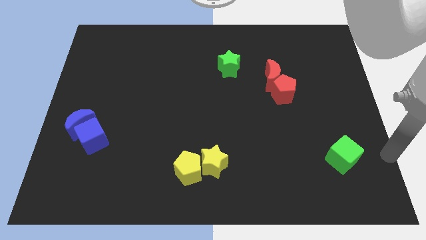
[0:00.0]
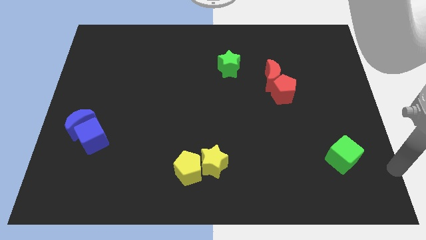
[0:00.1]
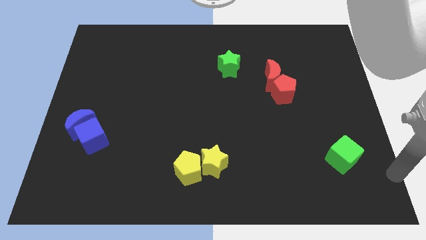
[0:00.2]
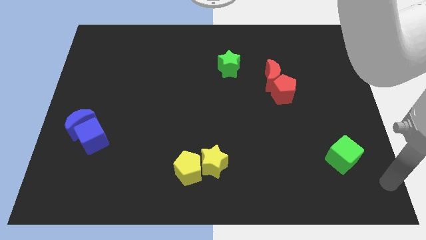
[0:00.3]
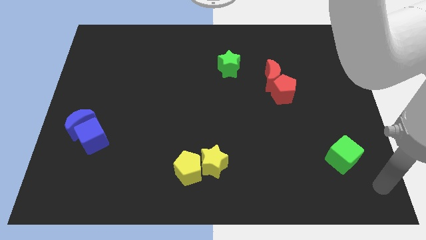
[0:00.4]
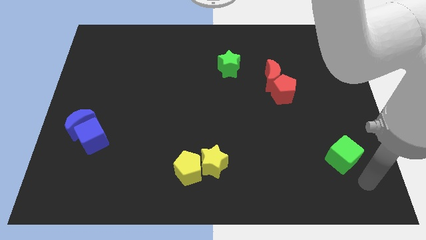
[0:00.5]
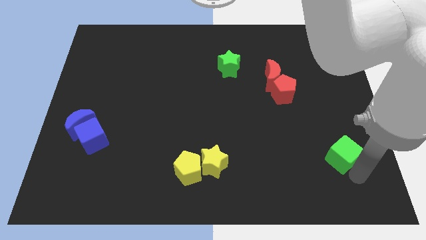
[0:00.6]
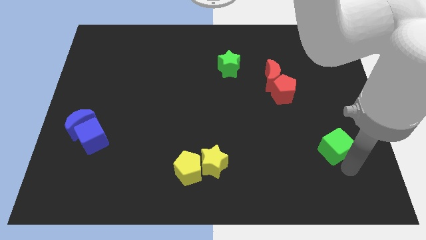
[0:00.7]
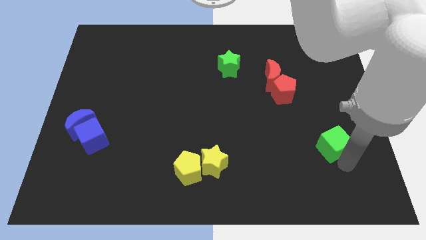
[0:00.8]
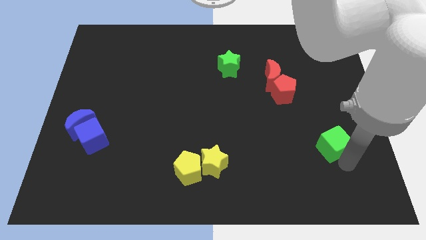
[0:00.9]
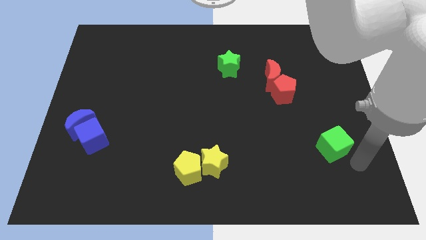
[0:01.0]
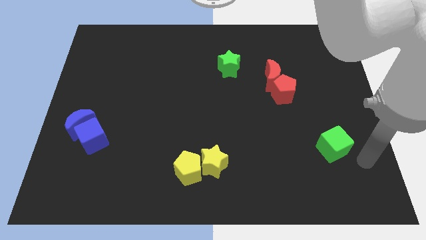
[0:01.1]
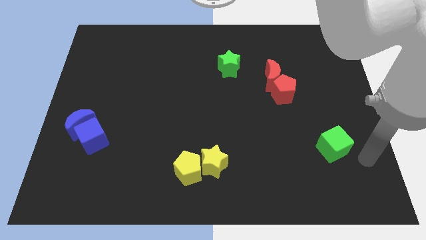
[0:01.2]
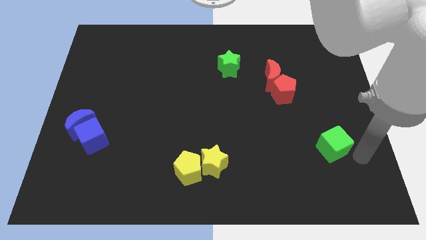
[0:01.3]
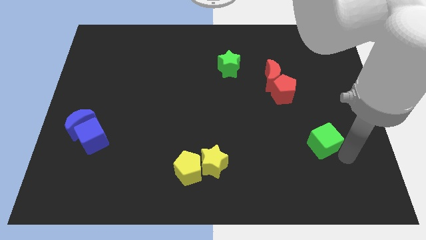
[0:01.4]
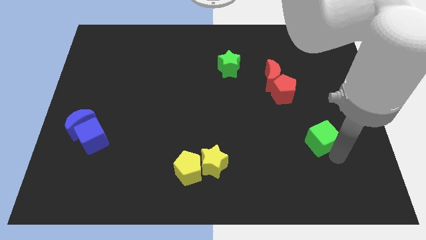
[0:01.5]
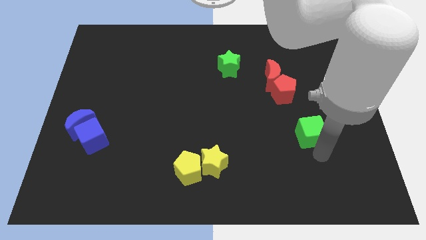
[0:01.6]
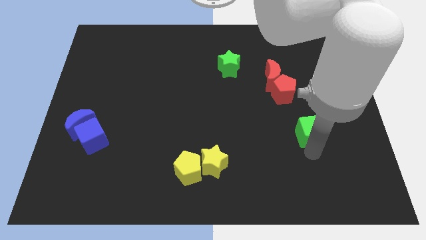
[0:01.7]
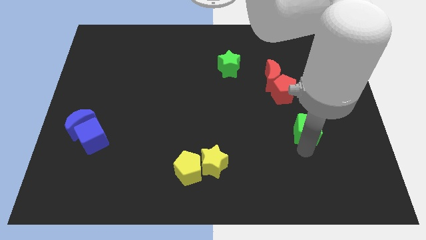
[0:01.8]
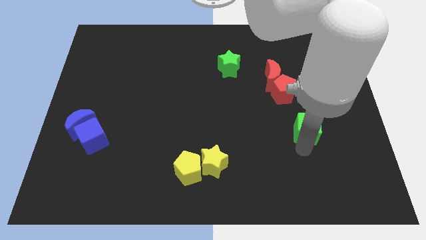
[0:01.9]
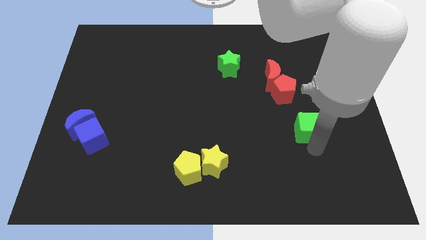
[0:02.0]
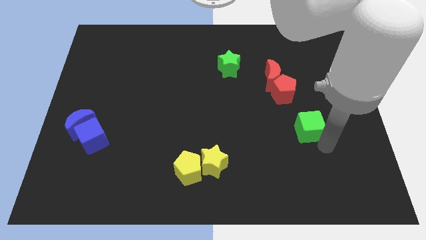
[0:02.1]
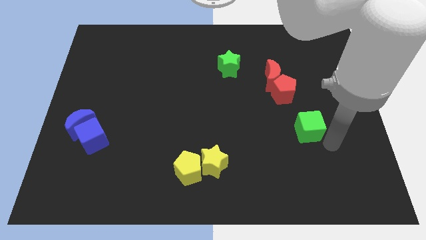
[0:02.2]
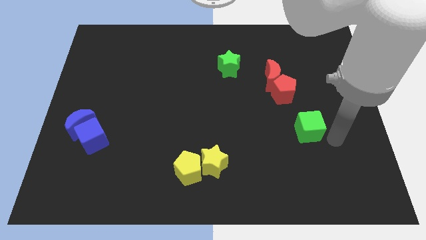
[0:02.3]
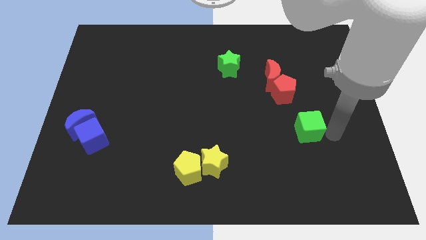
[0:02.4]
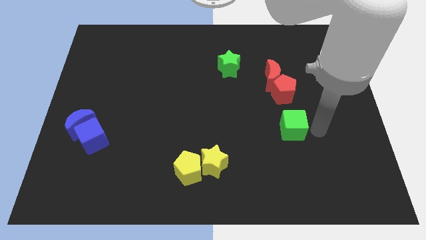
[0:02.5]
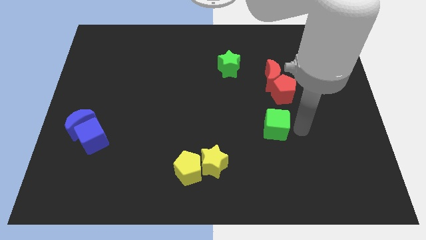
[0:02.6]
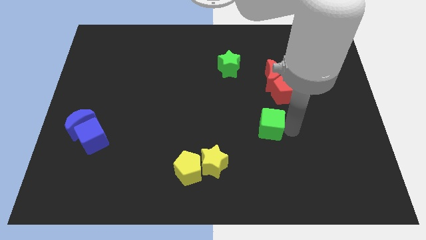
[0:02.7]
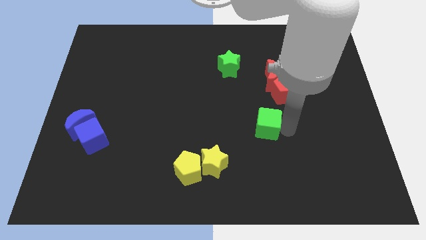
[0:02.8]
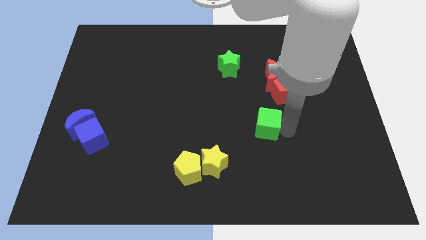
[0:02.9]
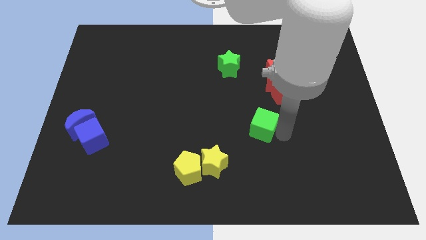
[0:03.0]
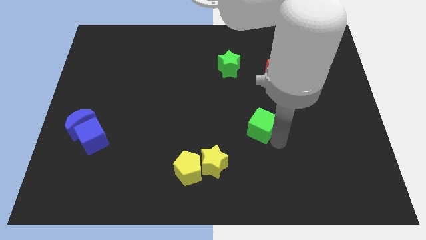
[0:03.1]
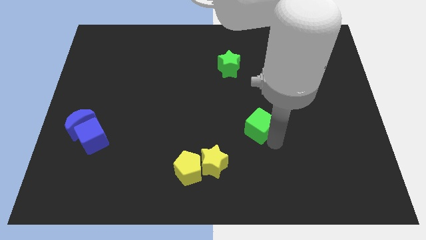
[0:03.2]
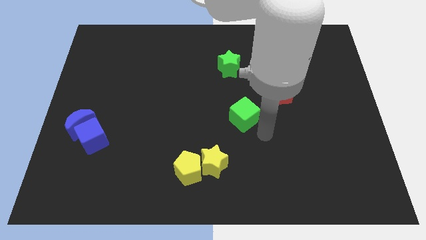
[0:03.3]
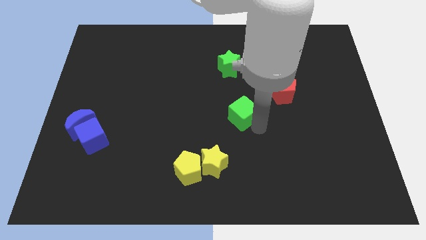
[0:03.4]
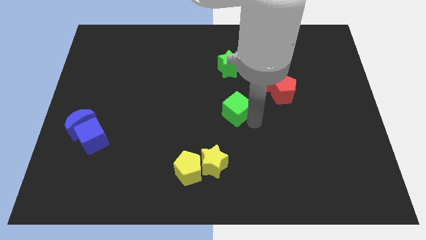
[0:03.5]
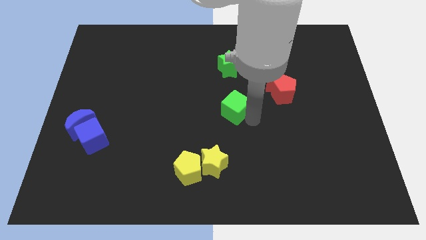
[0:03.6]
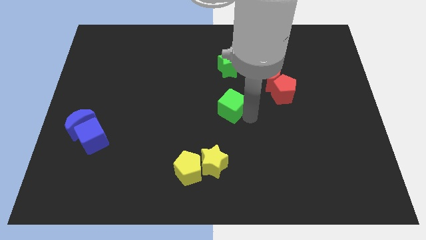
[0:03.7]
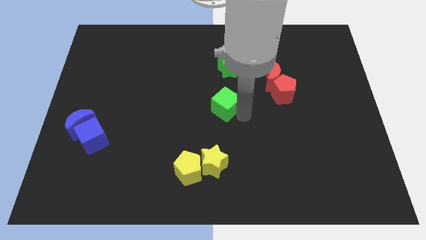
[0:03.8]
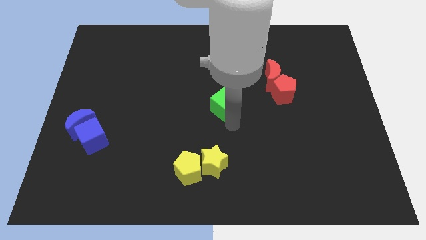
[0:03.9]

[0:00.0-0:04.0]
place the green cube at the center of the board

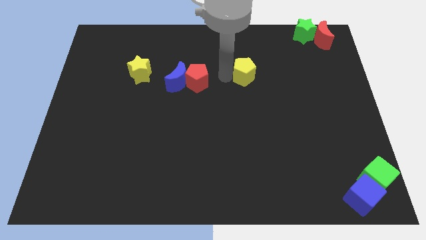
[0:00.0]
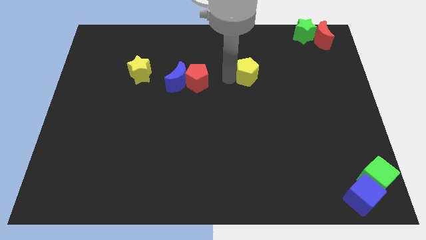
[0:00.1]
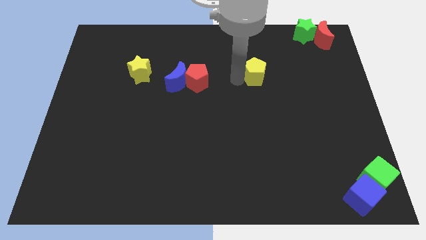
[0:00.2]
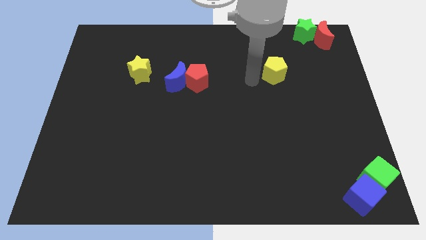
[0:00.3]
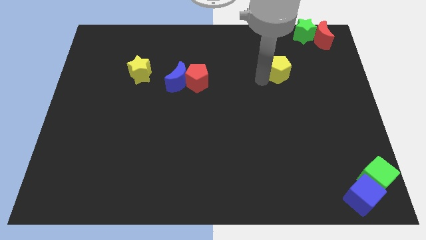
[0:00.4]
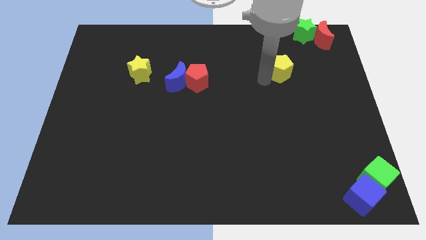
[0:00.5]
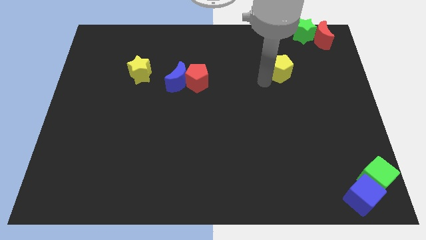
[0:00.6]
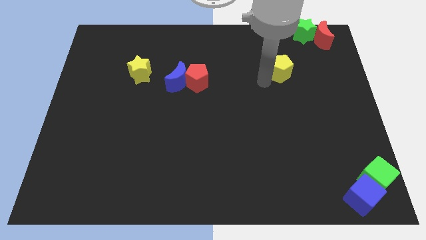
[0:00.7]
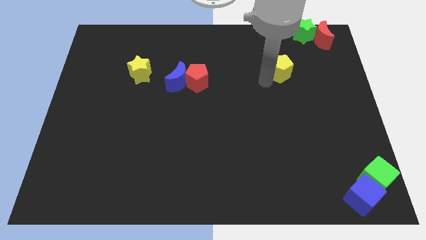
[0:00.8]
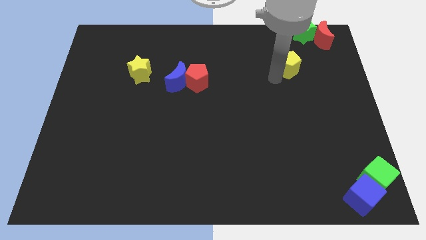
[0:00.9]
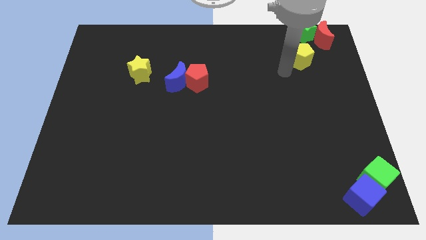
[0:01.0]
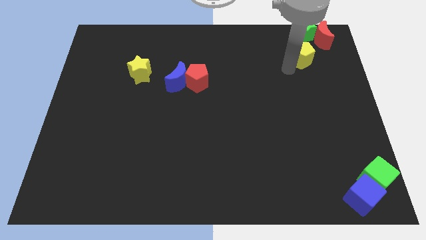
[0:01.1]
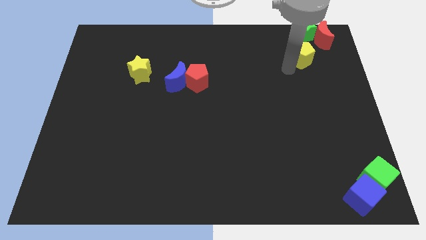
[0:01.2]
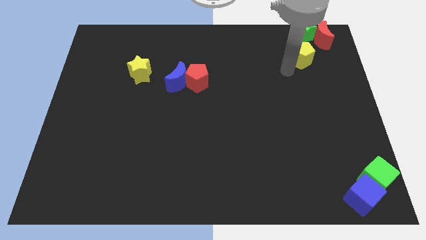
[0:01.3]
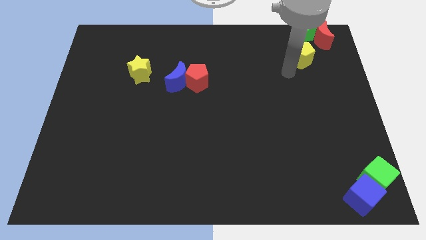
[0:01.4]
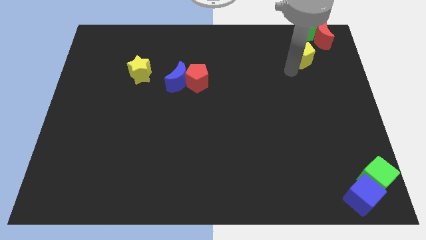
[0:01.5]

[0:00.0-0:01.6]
push the yellow pentagon below the red crescent and the green star

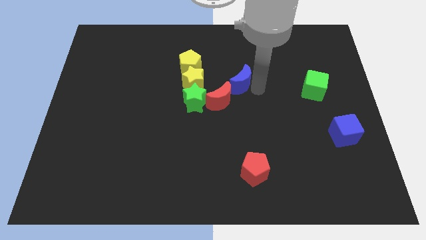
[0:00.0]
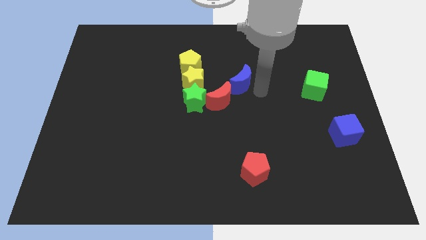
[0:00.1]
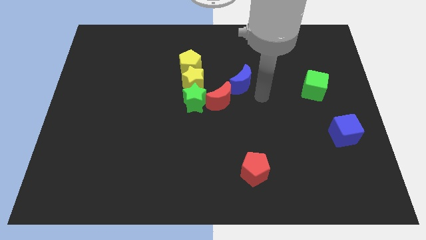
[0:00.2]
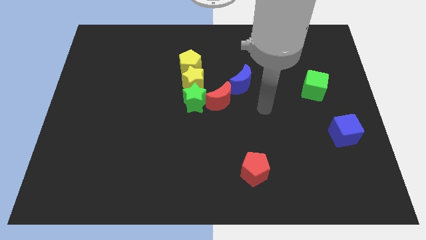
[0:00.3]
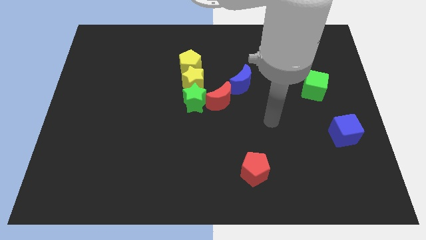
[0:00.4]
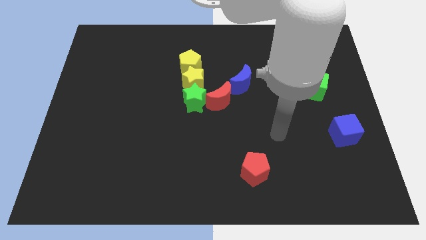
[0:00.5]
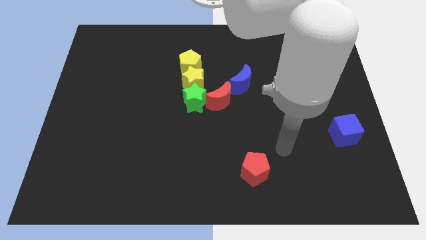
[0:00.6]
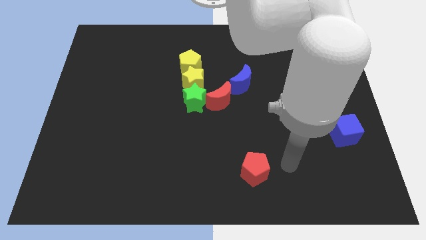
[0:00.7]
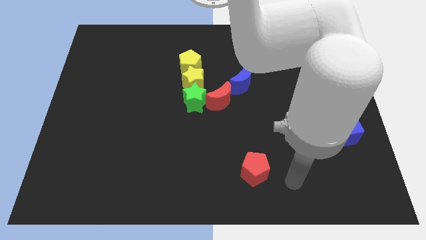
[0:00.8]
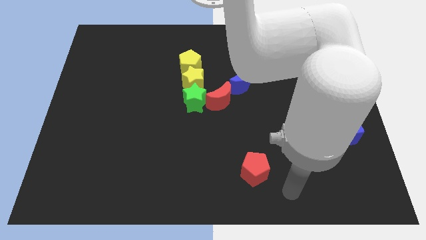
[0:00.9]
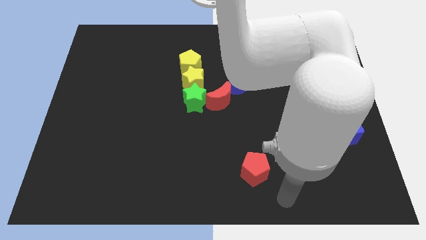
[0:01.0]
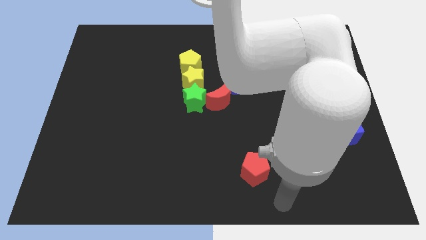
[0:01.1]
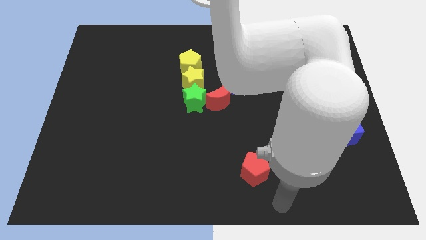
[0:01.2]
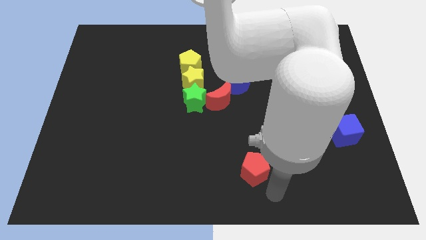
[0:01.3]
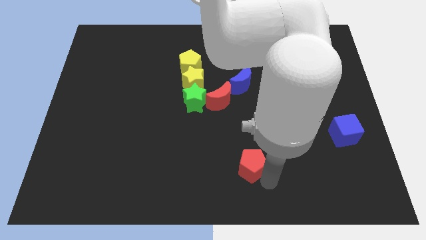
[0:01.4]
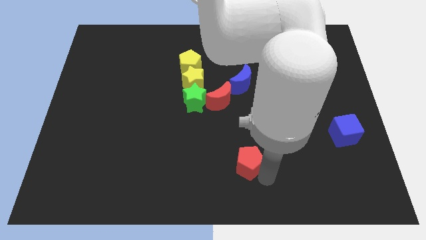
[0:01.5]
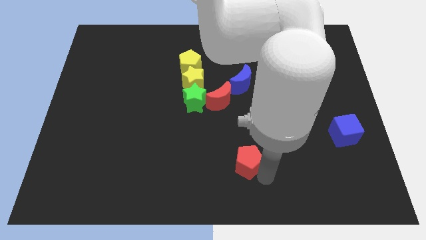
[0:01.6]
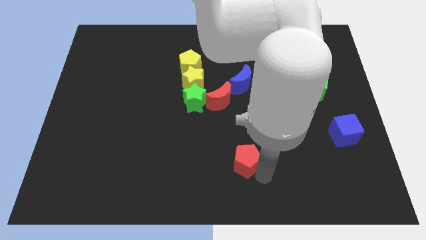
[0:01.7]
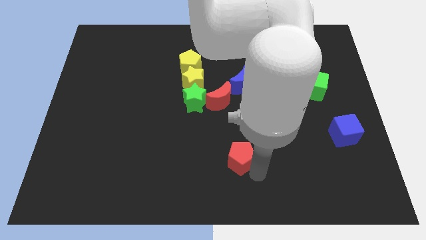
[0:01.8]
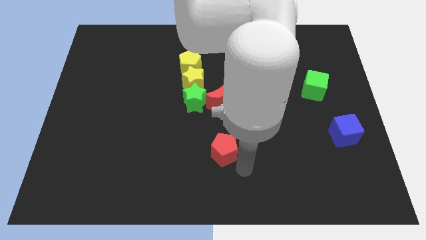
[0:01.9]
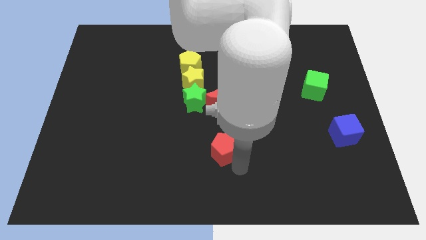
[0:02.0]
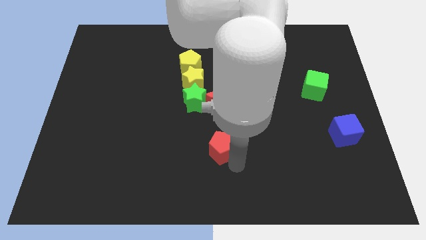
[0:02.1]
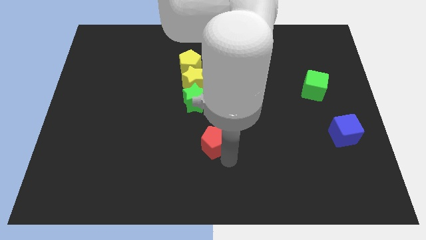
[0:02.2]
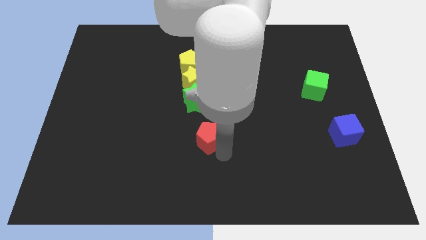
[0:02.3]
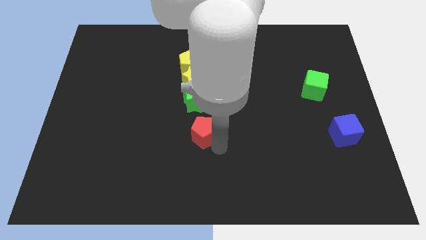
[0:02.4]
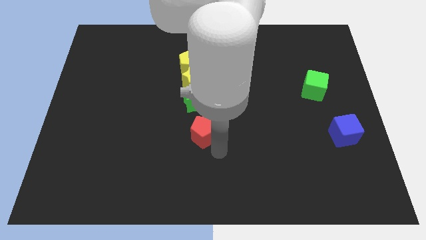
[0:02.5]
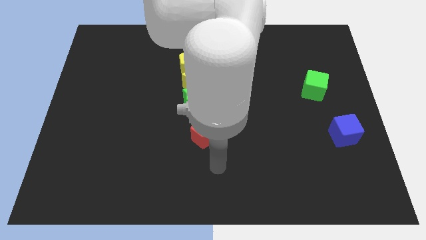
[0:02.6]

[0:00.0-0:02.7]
place the red pentagon at the bottom of green star

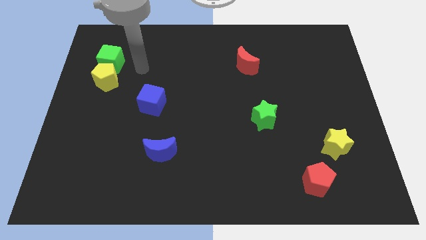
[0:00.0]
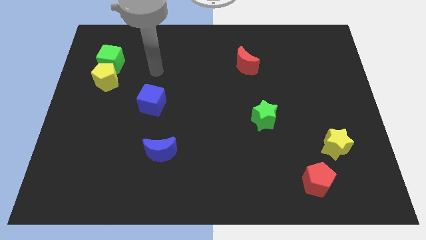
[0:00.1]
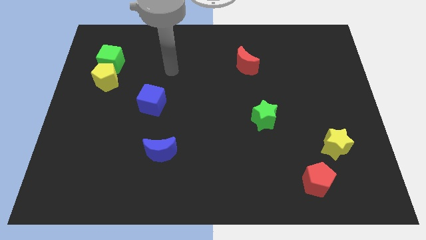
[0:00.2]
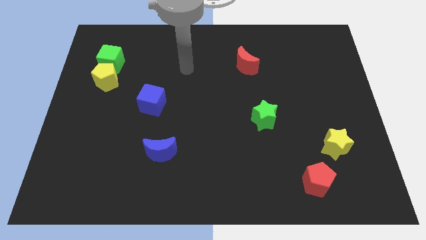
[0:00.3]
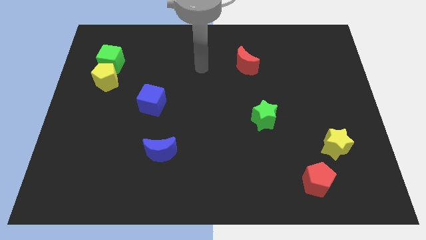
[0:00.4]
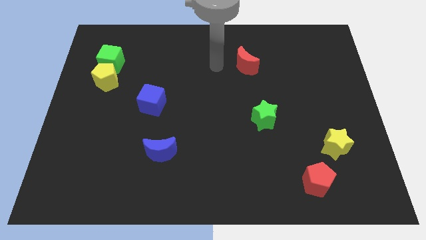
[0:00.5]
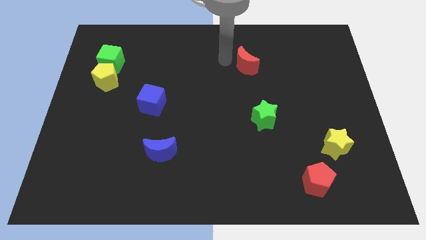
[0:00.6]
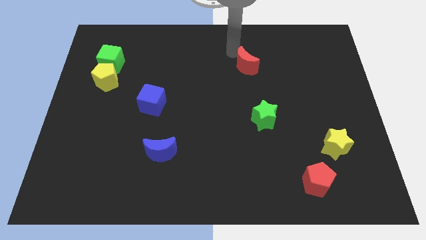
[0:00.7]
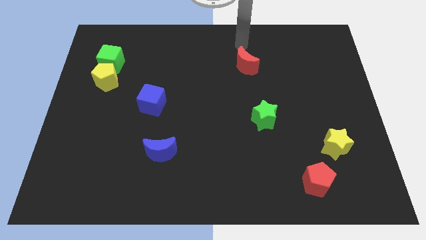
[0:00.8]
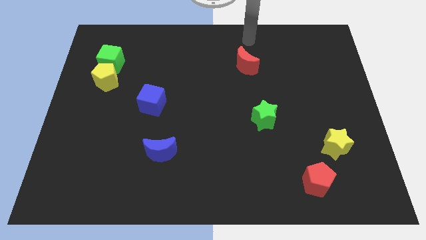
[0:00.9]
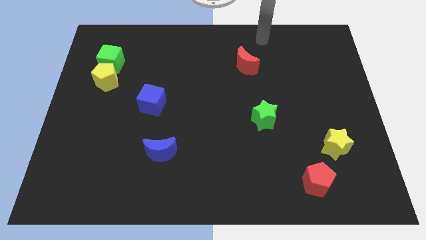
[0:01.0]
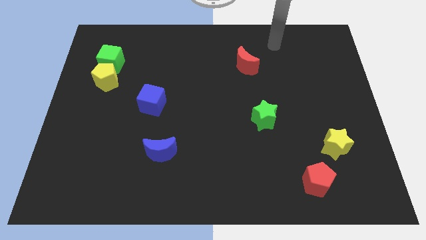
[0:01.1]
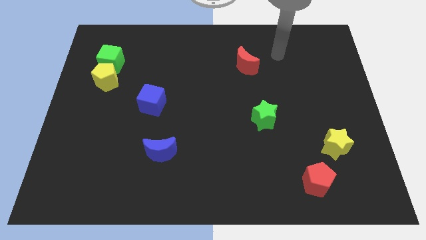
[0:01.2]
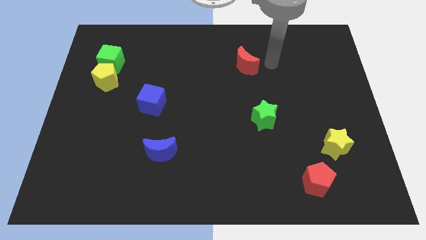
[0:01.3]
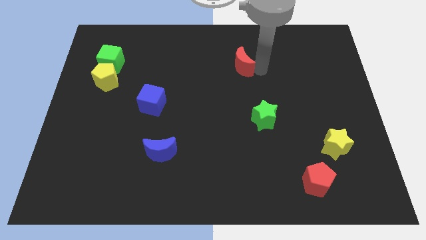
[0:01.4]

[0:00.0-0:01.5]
tap the red crescent on its right
